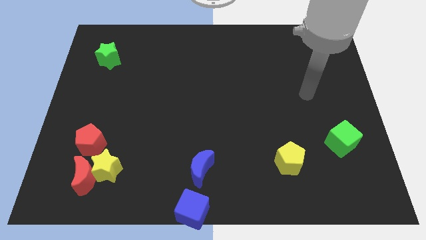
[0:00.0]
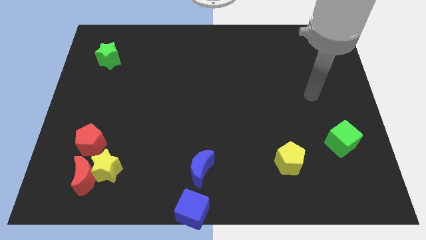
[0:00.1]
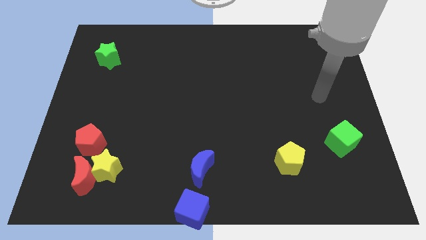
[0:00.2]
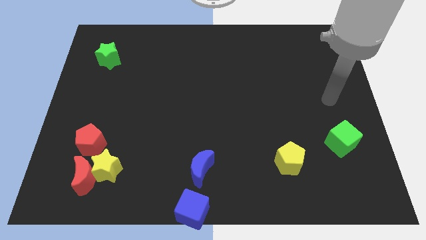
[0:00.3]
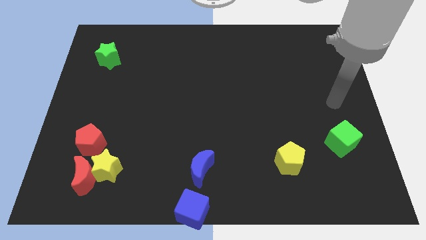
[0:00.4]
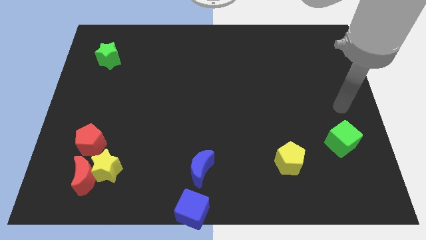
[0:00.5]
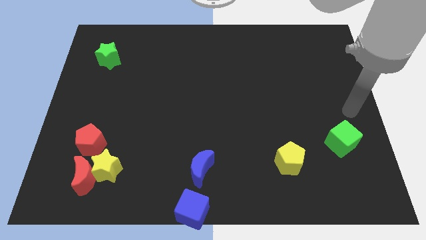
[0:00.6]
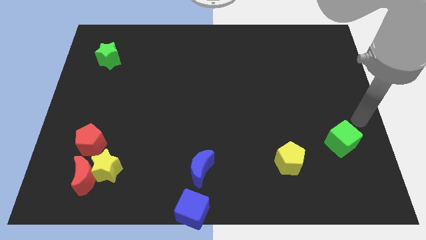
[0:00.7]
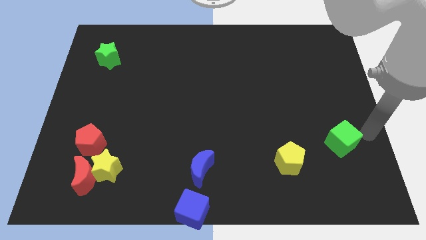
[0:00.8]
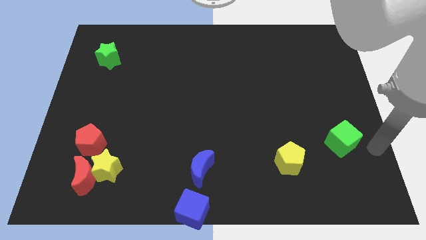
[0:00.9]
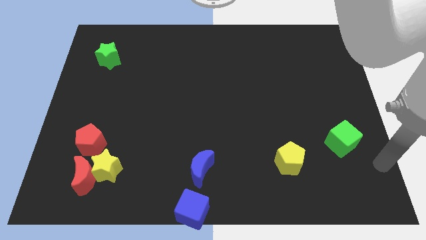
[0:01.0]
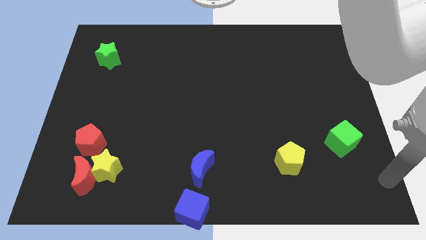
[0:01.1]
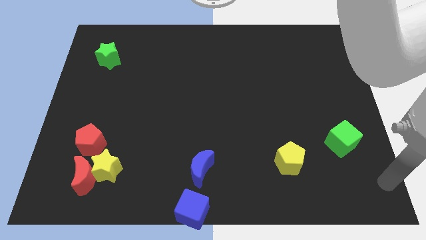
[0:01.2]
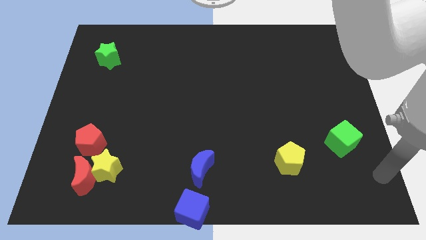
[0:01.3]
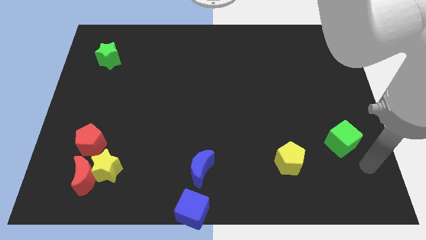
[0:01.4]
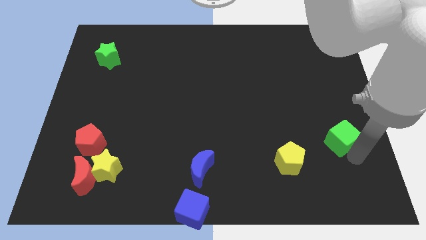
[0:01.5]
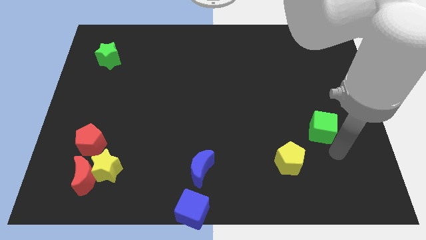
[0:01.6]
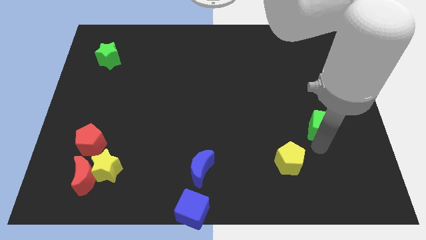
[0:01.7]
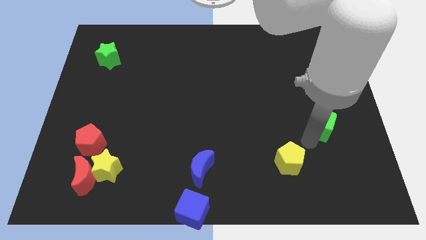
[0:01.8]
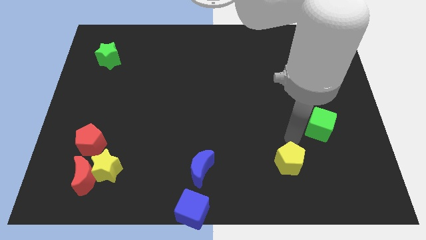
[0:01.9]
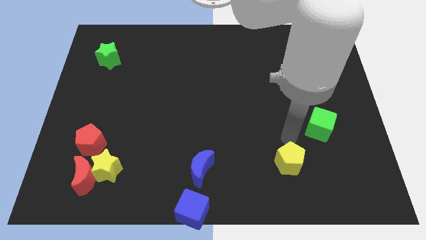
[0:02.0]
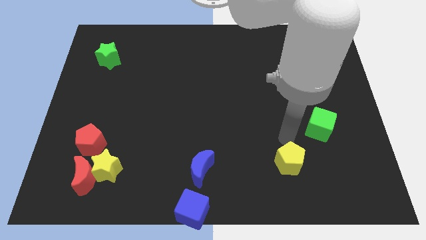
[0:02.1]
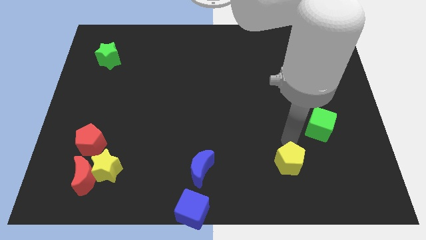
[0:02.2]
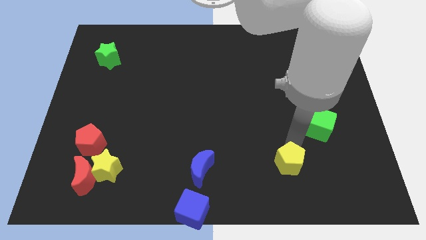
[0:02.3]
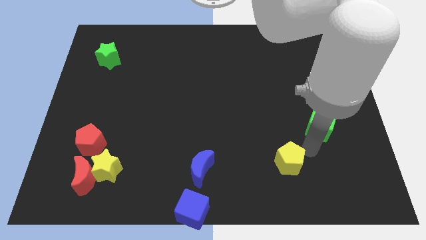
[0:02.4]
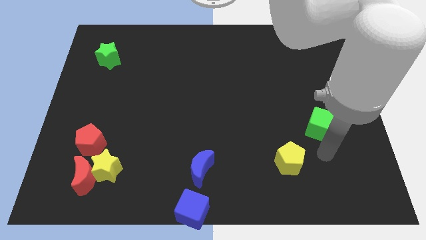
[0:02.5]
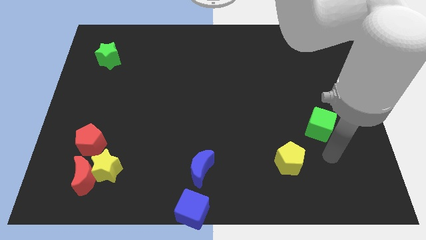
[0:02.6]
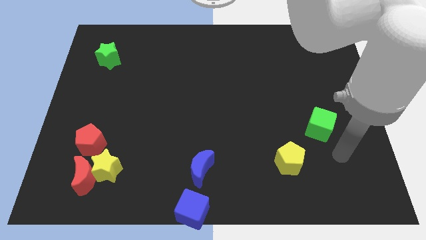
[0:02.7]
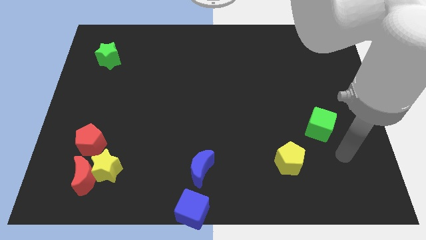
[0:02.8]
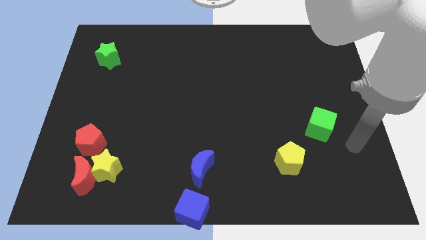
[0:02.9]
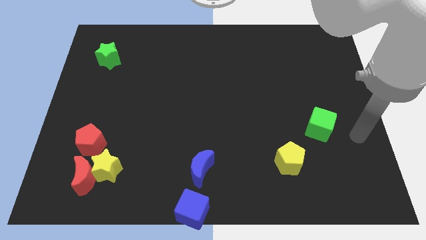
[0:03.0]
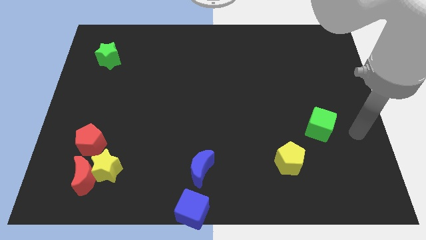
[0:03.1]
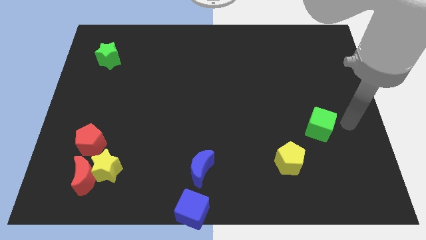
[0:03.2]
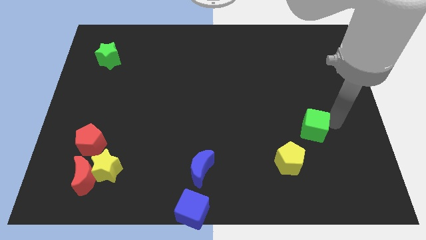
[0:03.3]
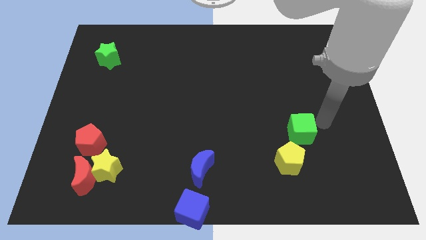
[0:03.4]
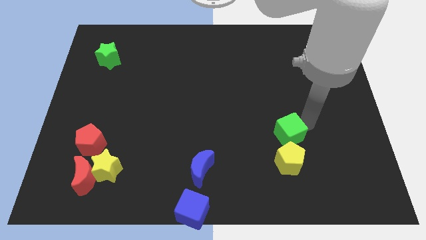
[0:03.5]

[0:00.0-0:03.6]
move the green cube above to the yellow pentagon

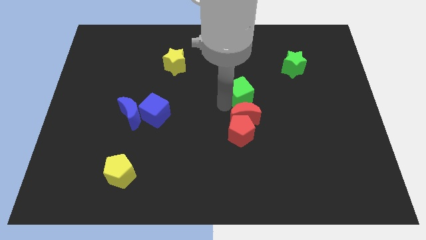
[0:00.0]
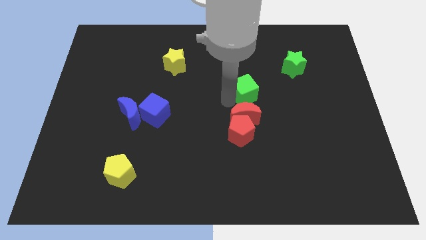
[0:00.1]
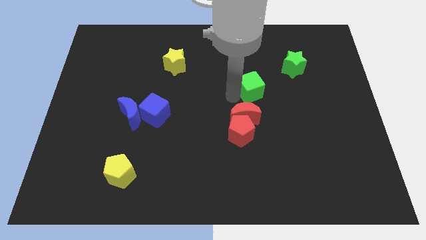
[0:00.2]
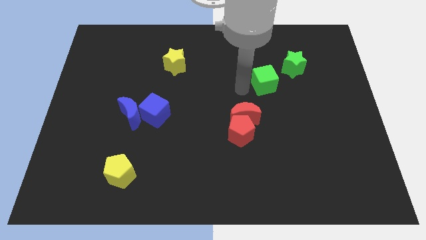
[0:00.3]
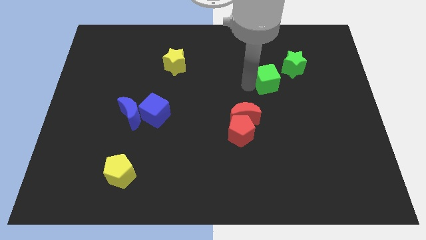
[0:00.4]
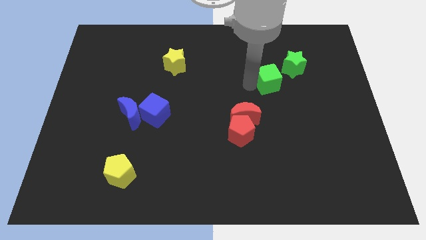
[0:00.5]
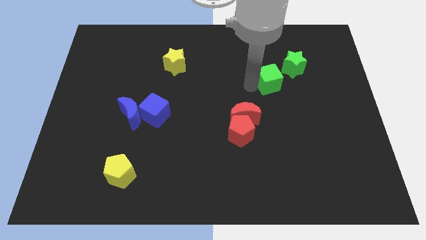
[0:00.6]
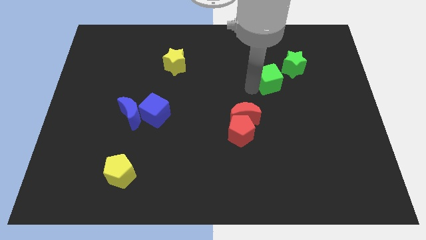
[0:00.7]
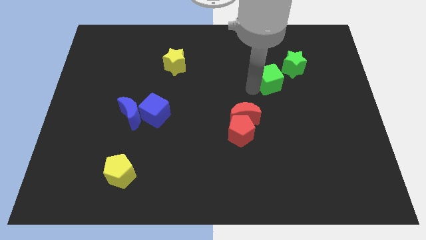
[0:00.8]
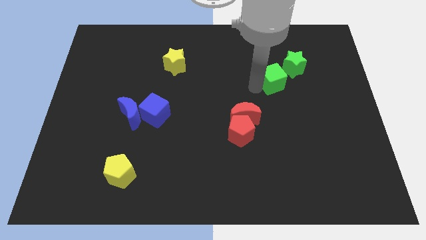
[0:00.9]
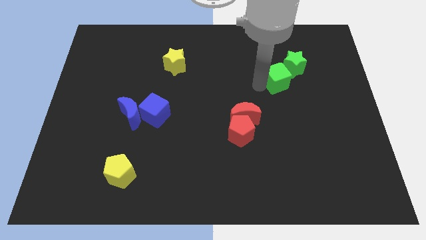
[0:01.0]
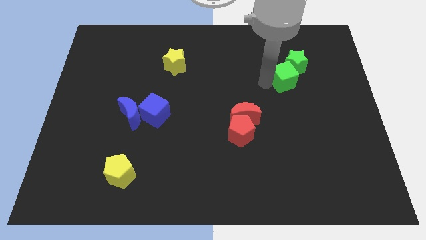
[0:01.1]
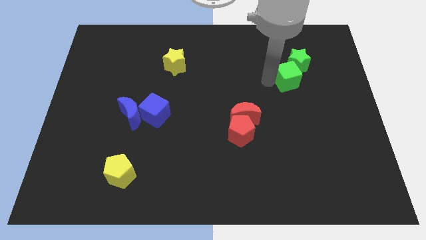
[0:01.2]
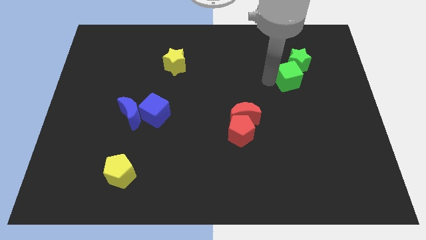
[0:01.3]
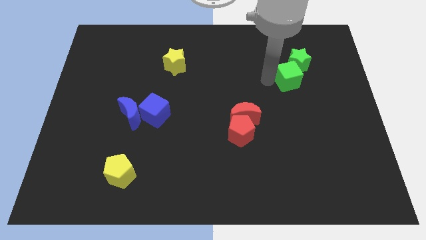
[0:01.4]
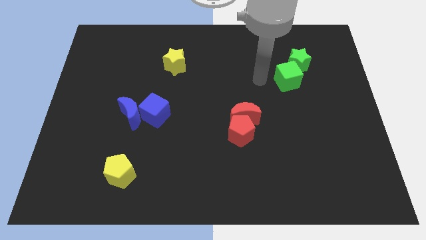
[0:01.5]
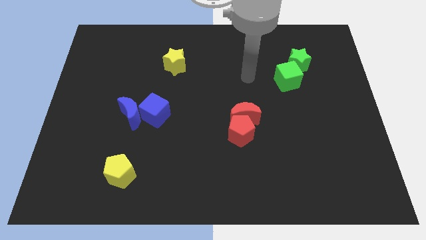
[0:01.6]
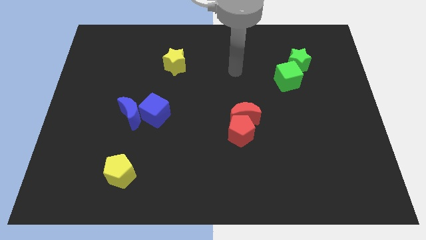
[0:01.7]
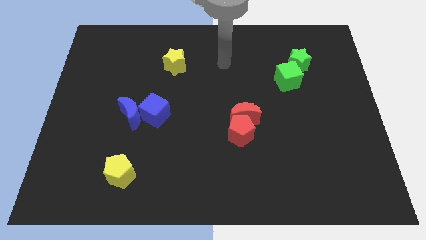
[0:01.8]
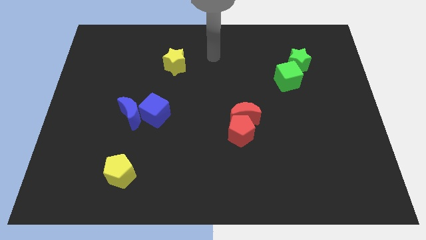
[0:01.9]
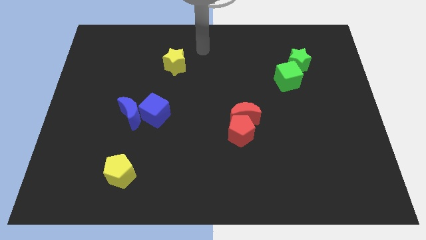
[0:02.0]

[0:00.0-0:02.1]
push the green cube into the green star

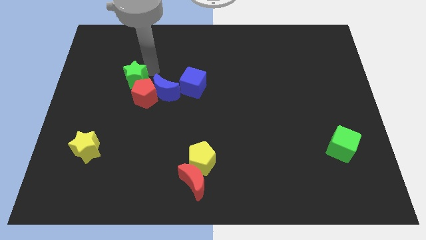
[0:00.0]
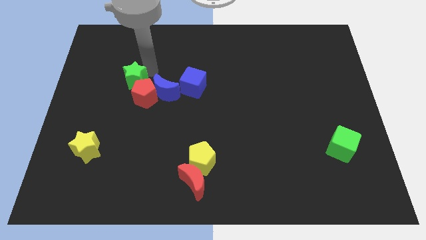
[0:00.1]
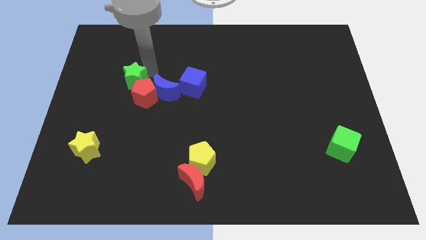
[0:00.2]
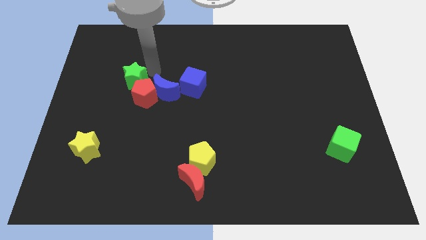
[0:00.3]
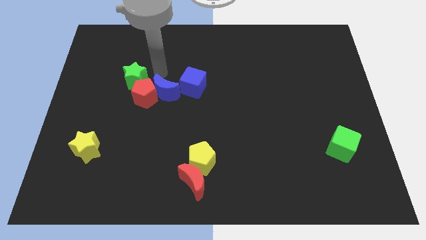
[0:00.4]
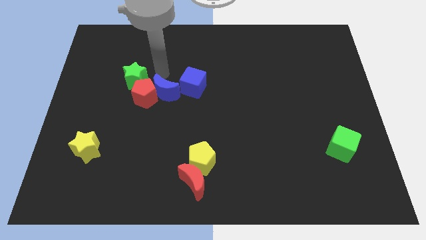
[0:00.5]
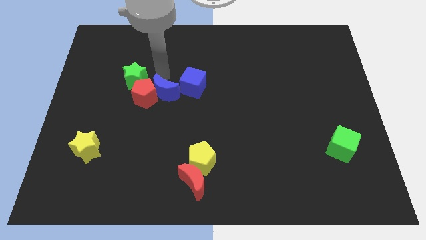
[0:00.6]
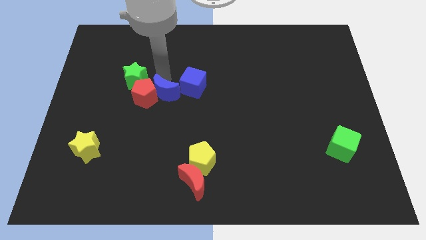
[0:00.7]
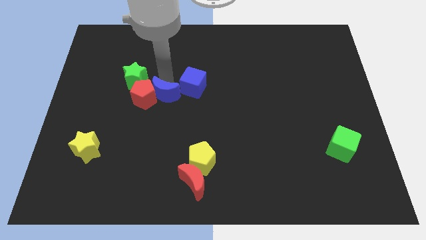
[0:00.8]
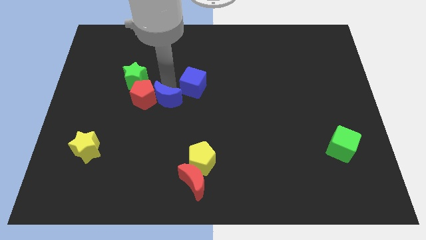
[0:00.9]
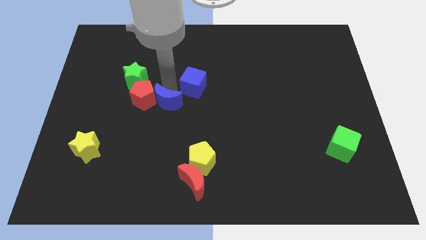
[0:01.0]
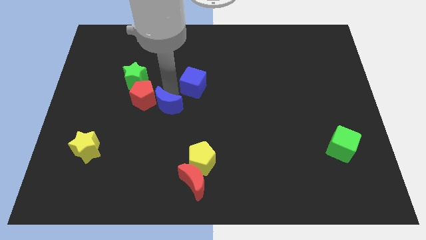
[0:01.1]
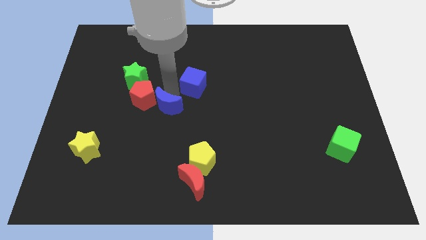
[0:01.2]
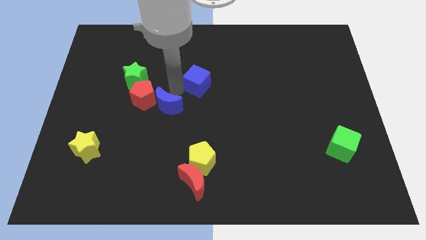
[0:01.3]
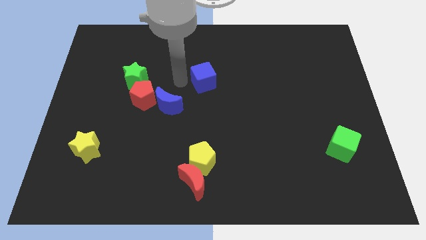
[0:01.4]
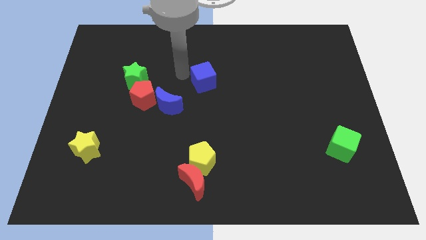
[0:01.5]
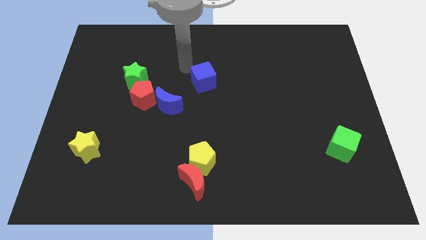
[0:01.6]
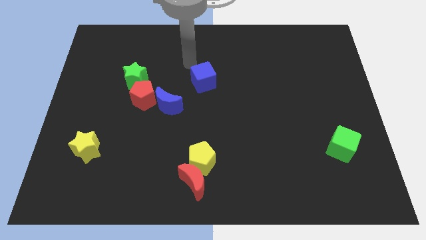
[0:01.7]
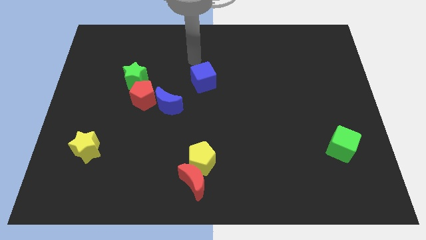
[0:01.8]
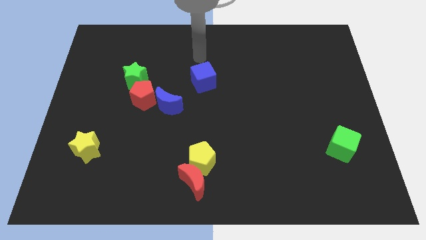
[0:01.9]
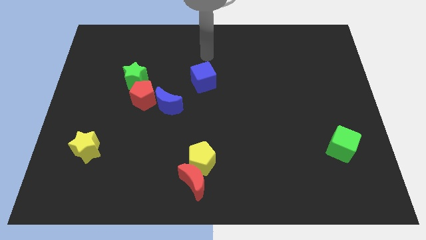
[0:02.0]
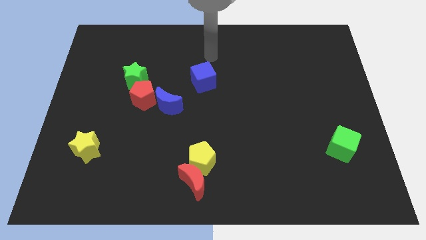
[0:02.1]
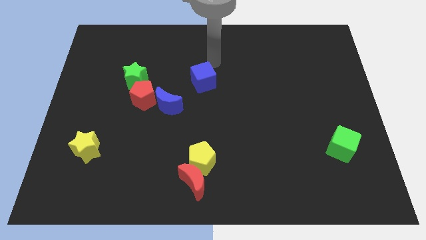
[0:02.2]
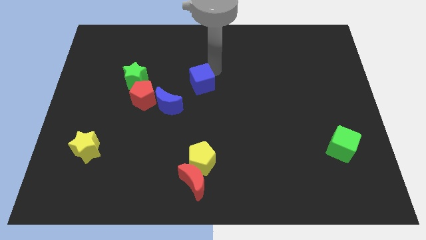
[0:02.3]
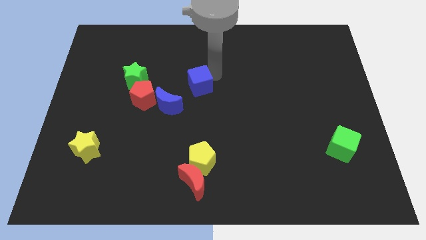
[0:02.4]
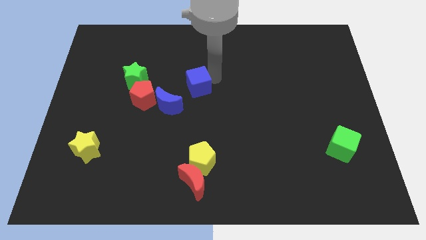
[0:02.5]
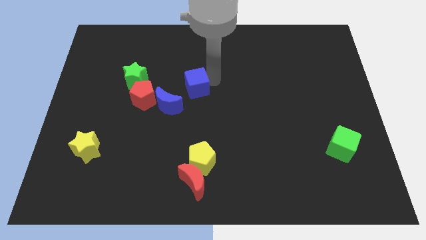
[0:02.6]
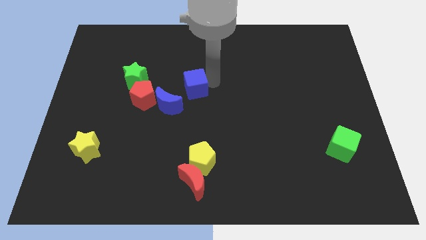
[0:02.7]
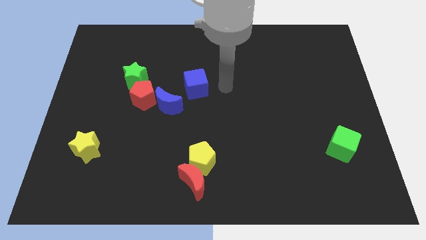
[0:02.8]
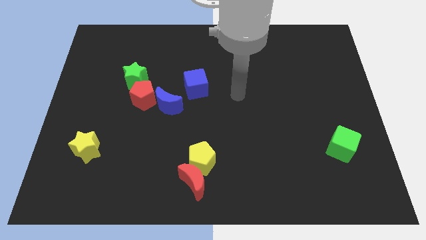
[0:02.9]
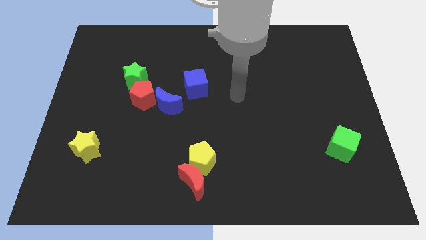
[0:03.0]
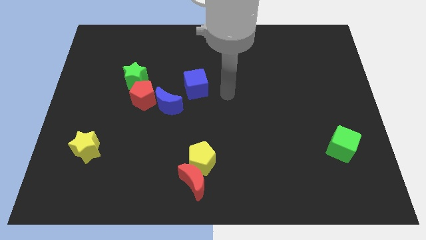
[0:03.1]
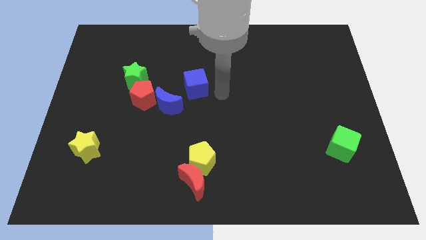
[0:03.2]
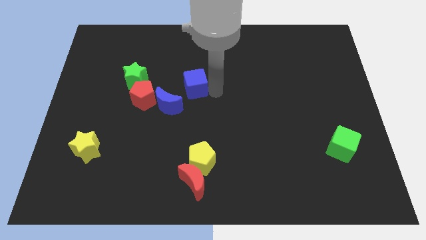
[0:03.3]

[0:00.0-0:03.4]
separate the blue blocks from each other
